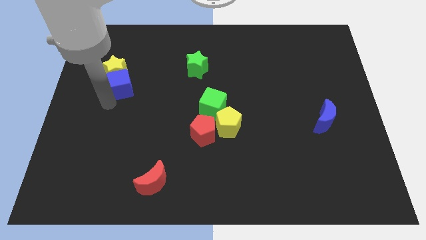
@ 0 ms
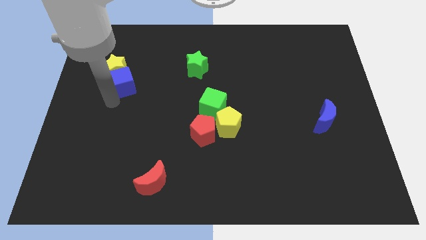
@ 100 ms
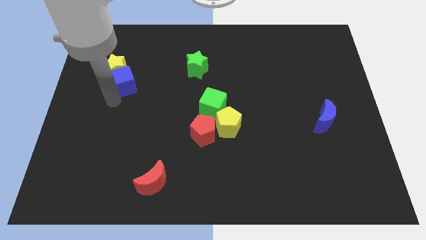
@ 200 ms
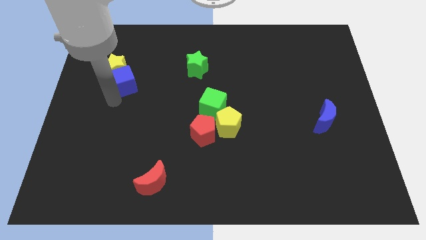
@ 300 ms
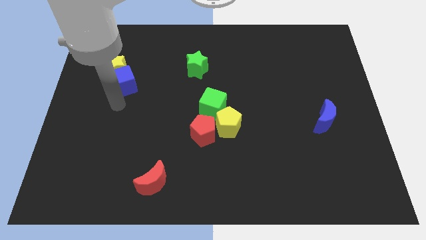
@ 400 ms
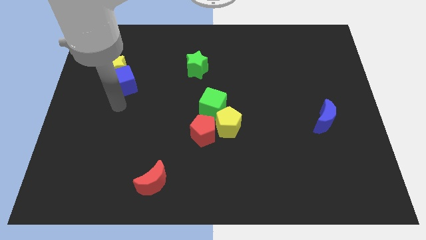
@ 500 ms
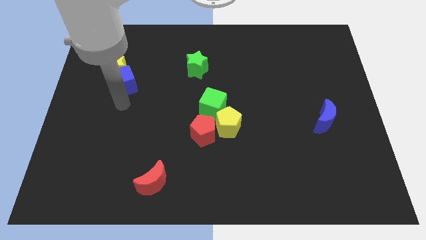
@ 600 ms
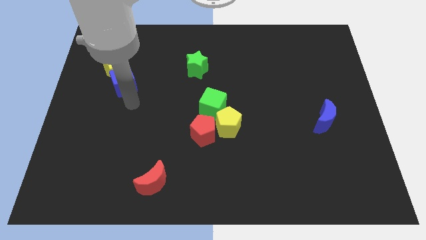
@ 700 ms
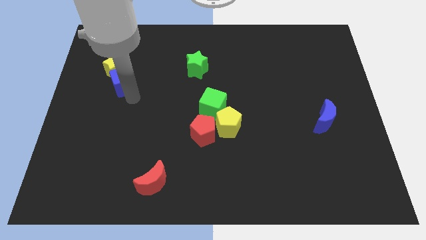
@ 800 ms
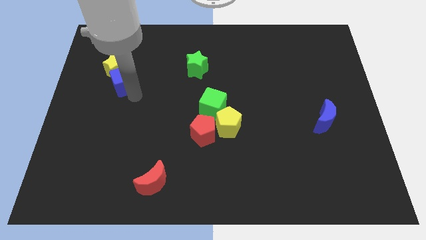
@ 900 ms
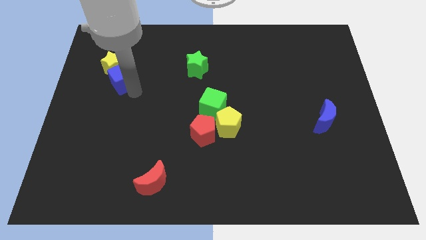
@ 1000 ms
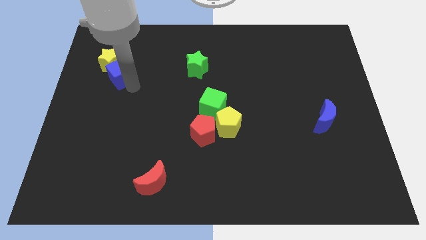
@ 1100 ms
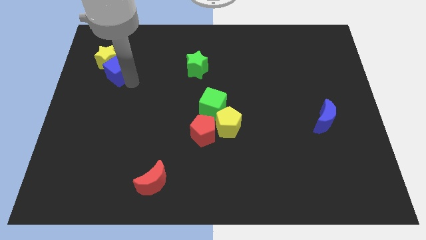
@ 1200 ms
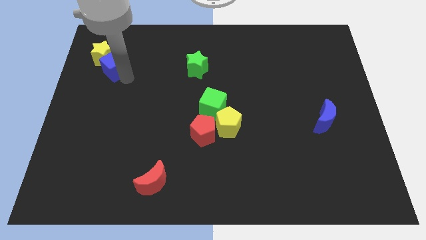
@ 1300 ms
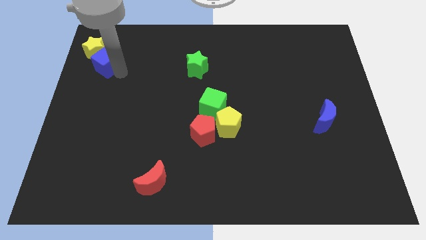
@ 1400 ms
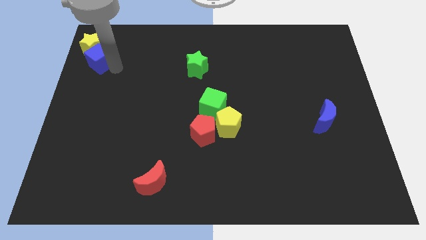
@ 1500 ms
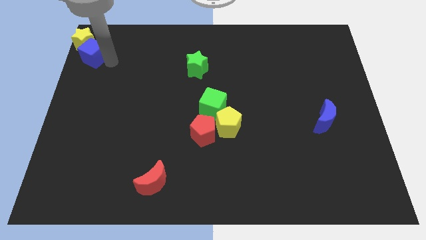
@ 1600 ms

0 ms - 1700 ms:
move blue moon along with yellow star to the top left corner

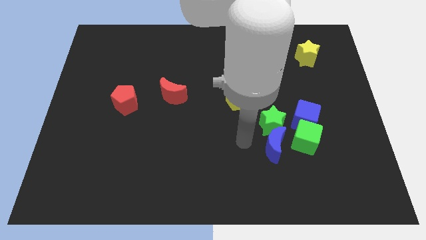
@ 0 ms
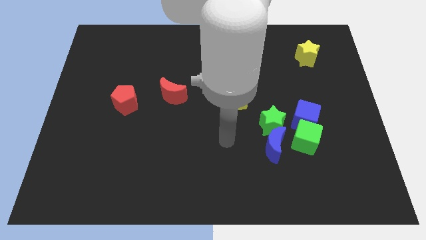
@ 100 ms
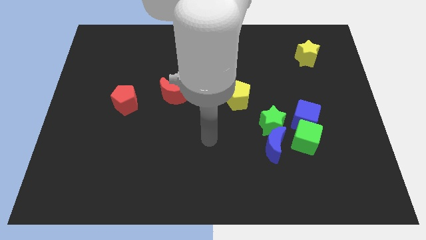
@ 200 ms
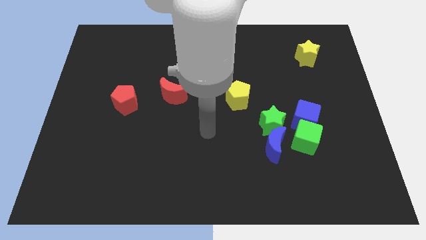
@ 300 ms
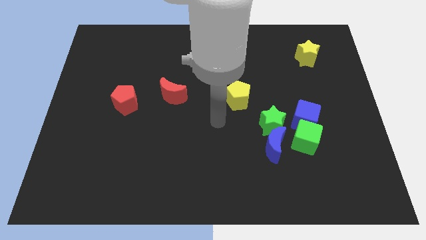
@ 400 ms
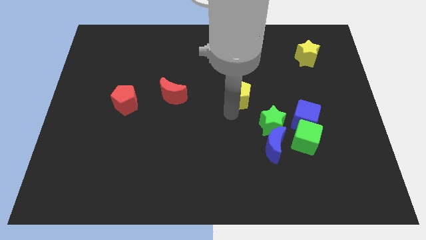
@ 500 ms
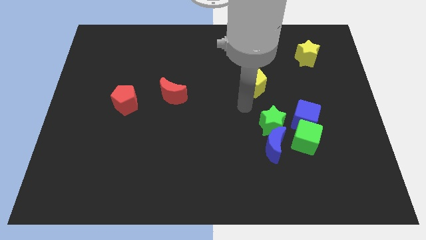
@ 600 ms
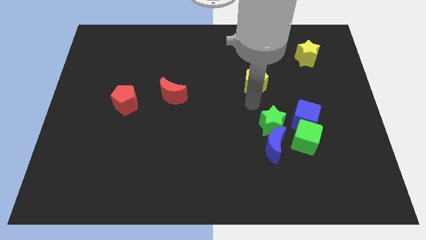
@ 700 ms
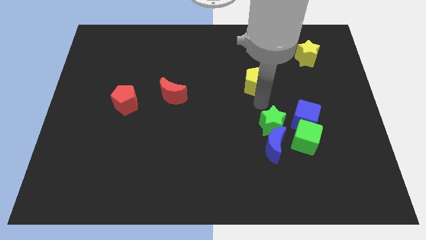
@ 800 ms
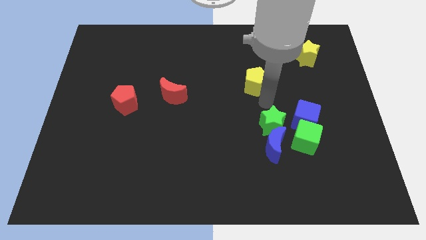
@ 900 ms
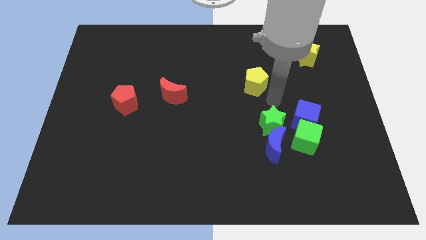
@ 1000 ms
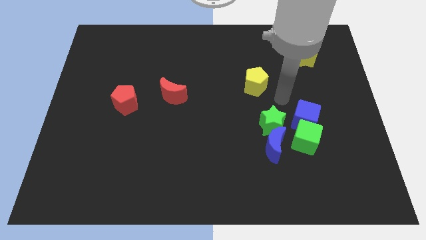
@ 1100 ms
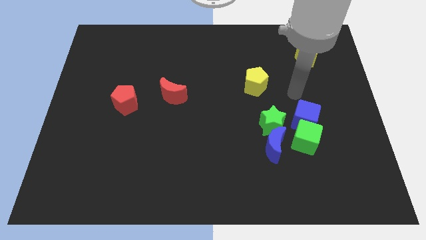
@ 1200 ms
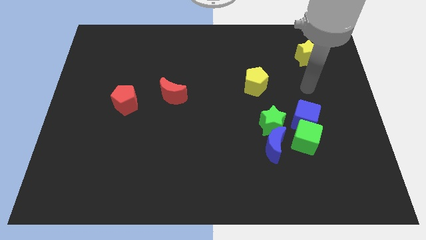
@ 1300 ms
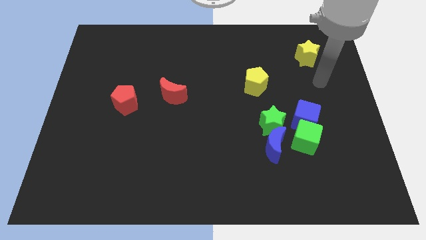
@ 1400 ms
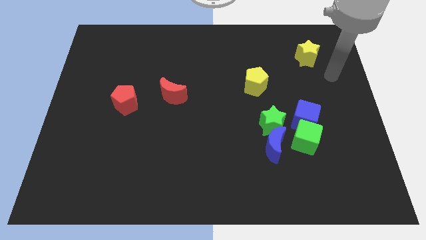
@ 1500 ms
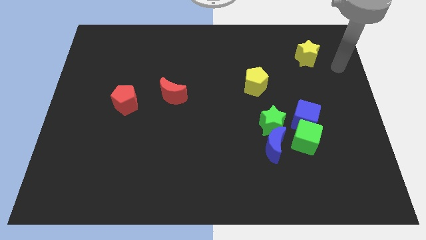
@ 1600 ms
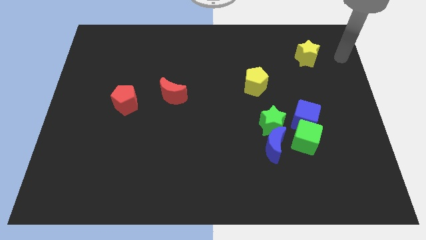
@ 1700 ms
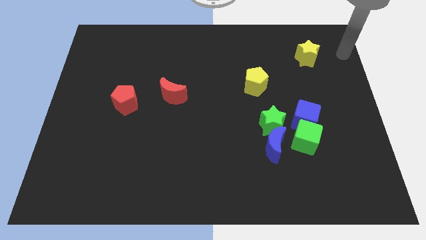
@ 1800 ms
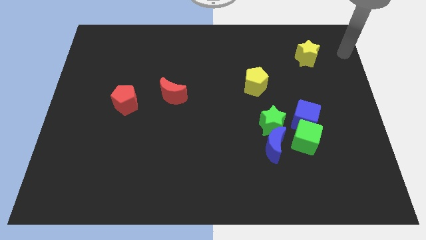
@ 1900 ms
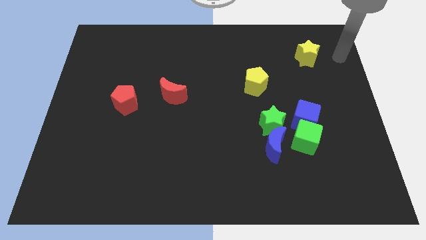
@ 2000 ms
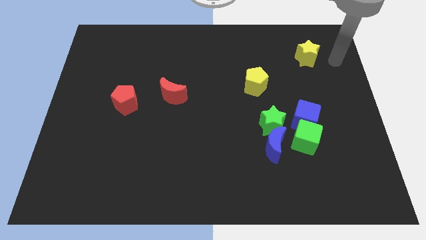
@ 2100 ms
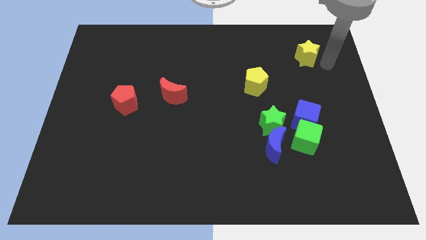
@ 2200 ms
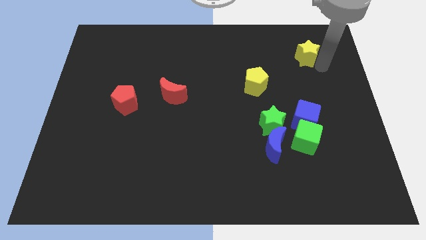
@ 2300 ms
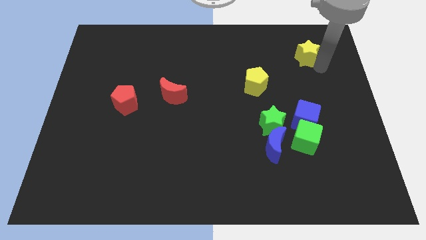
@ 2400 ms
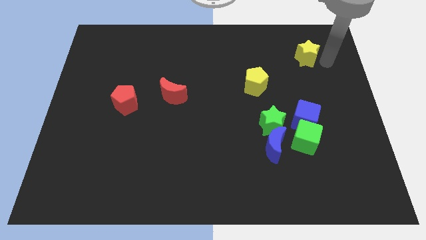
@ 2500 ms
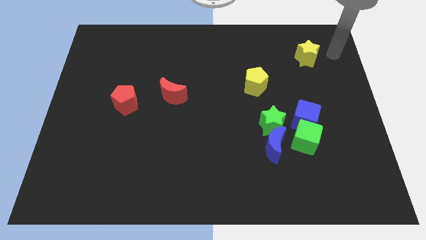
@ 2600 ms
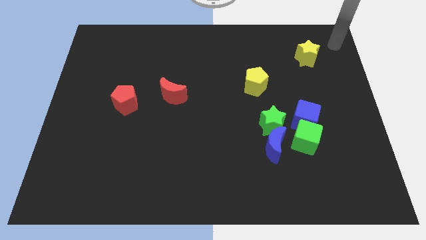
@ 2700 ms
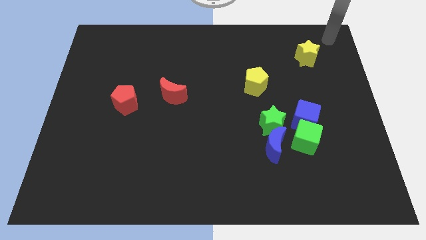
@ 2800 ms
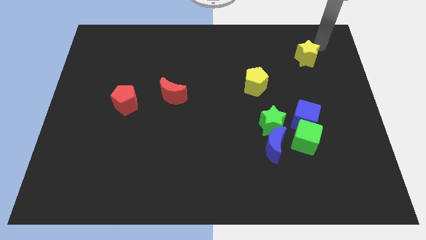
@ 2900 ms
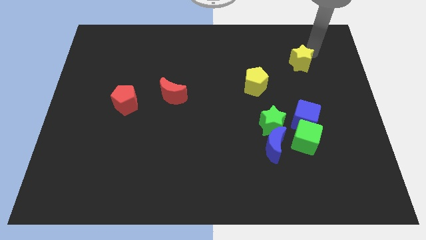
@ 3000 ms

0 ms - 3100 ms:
slide both the yellow blocks diagonal to each other

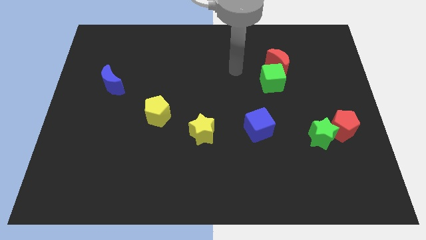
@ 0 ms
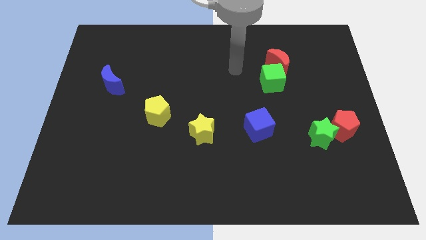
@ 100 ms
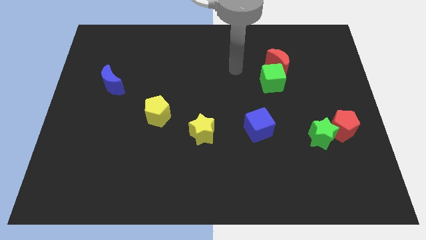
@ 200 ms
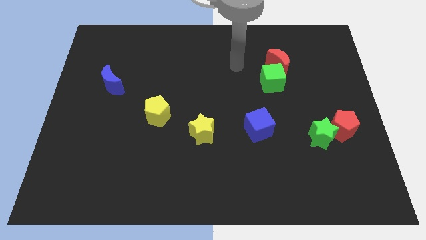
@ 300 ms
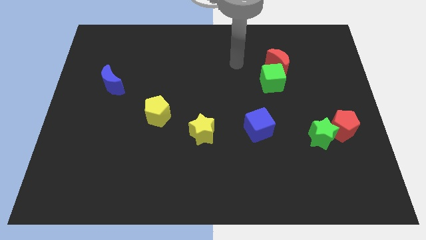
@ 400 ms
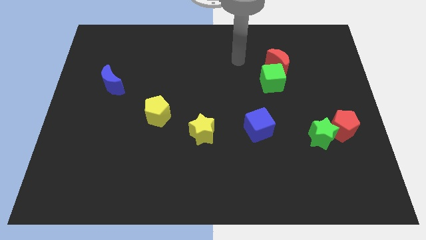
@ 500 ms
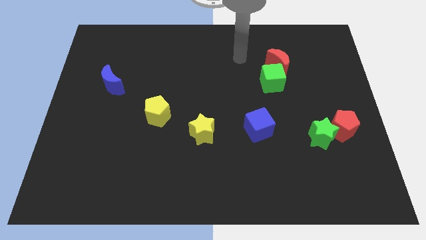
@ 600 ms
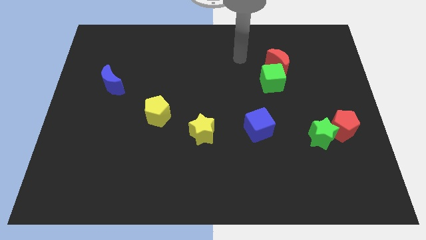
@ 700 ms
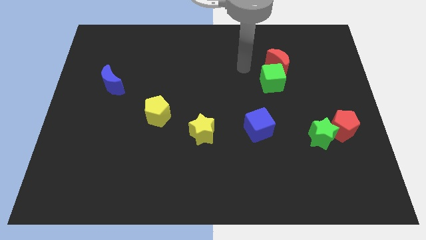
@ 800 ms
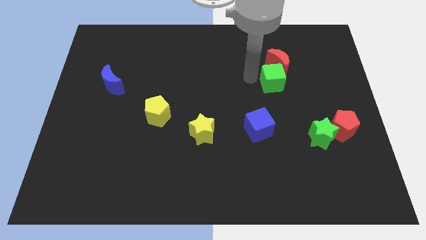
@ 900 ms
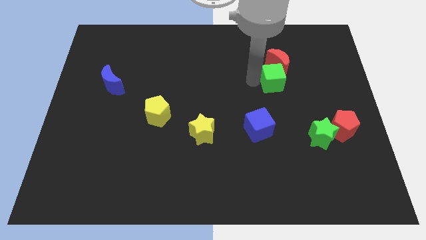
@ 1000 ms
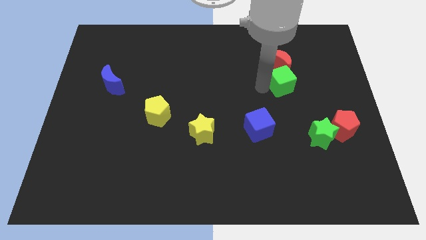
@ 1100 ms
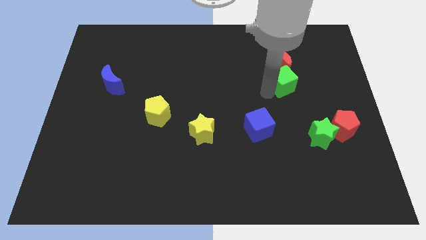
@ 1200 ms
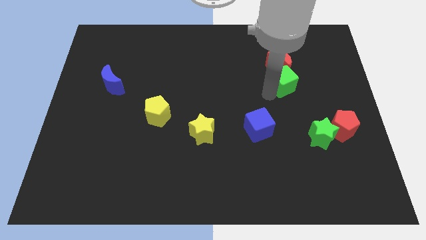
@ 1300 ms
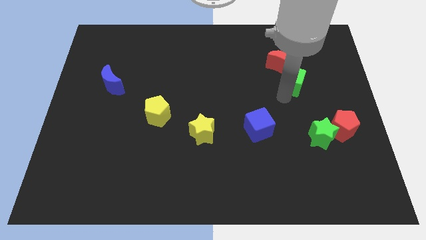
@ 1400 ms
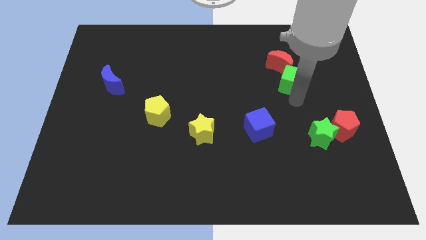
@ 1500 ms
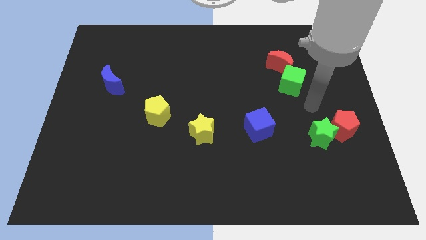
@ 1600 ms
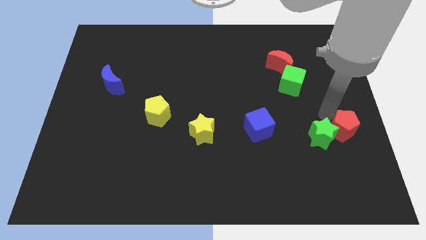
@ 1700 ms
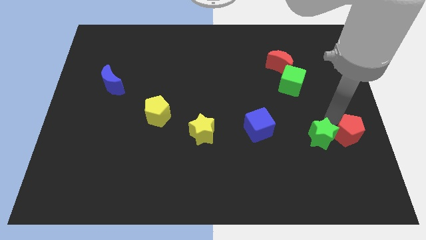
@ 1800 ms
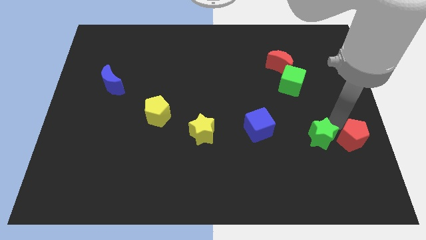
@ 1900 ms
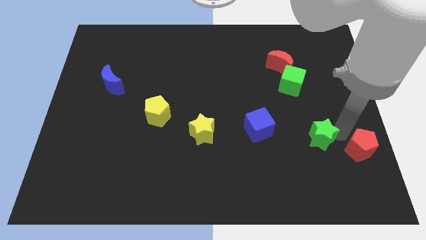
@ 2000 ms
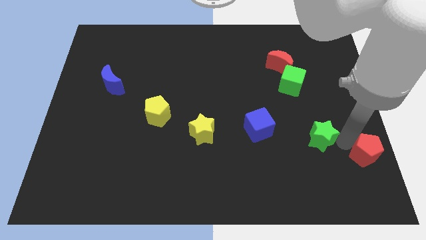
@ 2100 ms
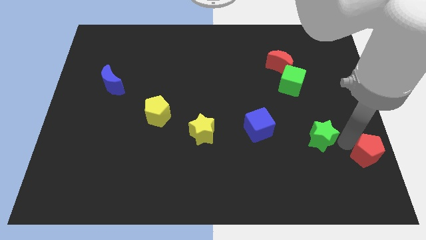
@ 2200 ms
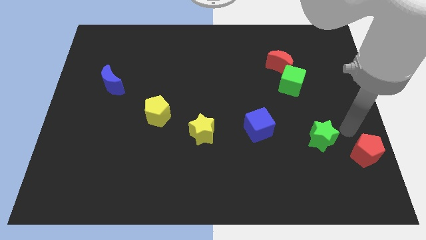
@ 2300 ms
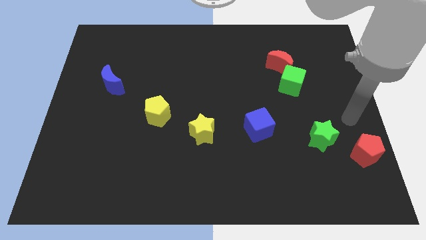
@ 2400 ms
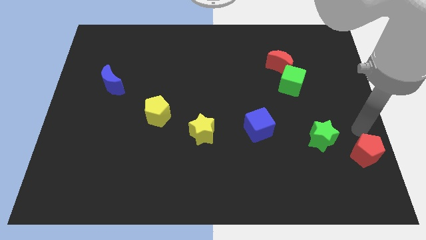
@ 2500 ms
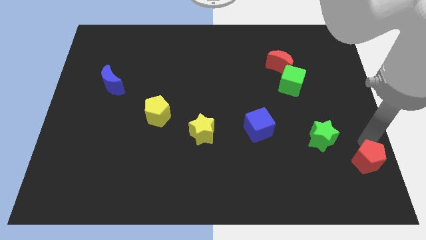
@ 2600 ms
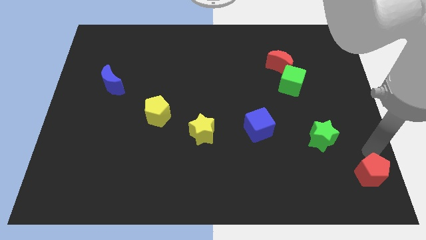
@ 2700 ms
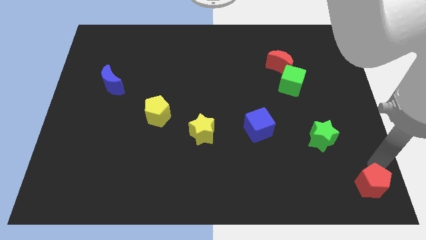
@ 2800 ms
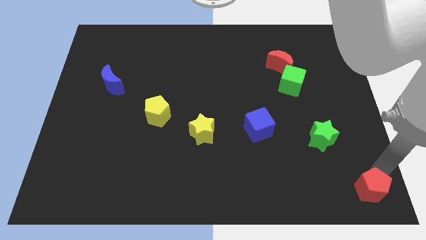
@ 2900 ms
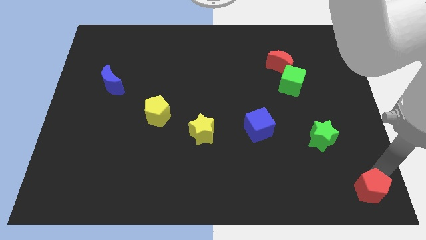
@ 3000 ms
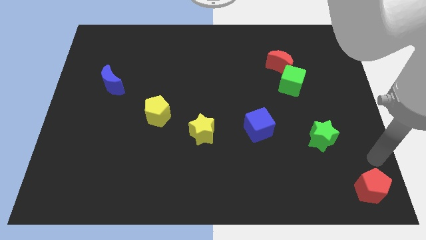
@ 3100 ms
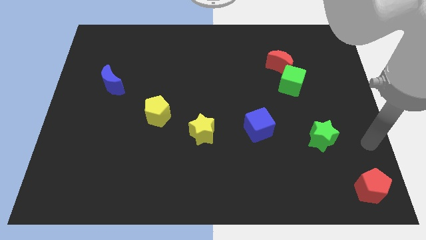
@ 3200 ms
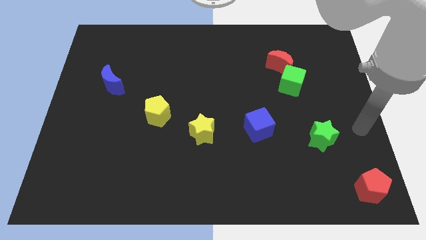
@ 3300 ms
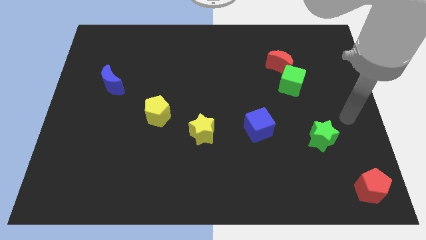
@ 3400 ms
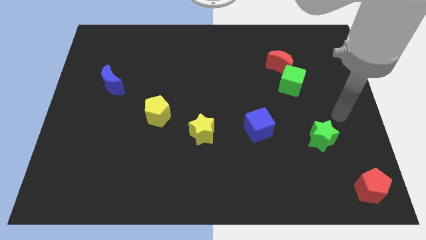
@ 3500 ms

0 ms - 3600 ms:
drag the red pentagon towards bottom right side

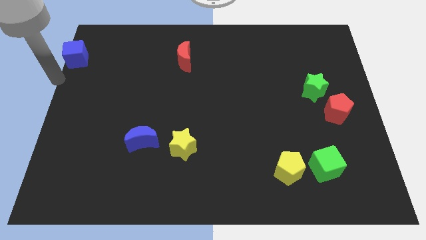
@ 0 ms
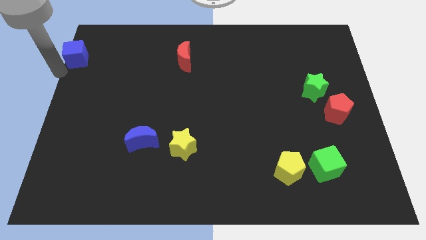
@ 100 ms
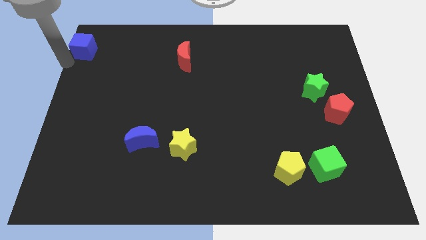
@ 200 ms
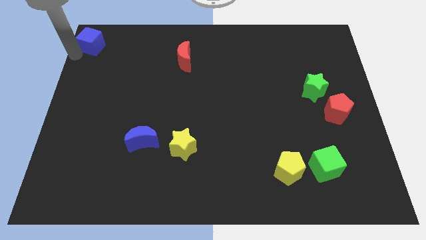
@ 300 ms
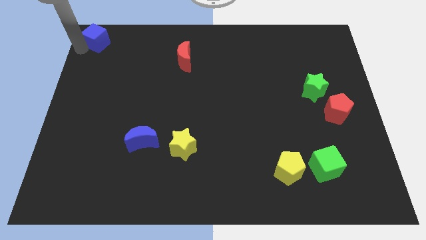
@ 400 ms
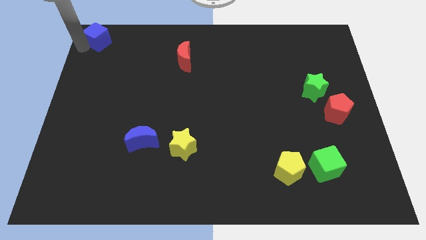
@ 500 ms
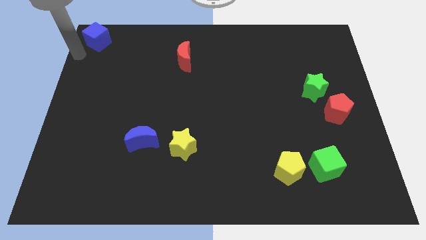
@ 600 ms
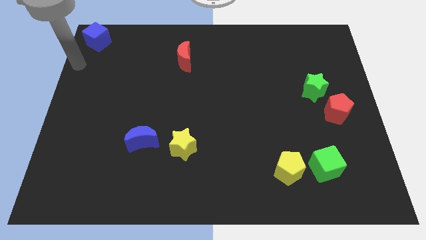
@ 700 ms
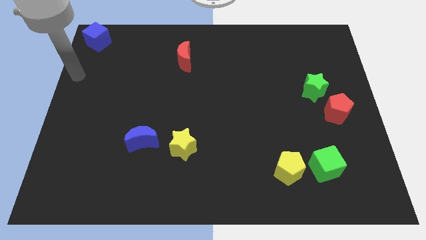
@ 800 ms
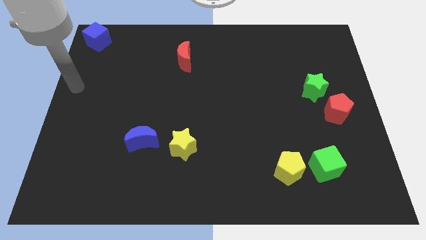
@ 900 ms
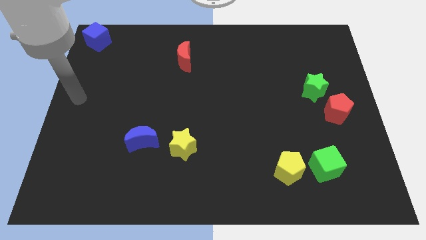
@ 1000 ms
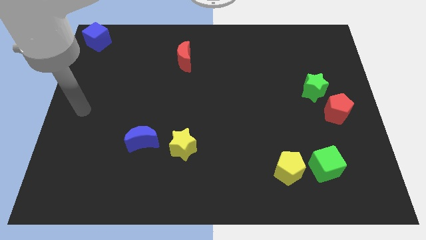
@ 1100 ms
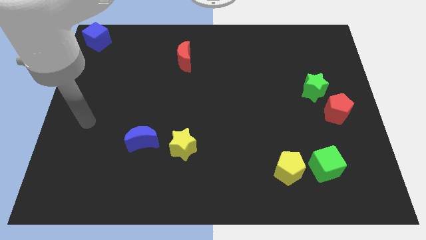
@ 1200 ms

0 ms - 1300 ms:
place blue cube at the top left corner of the board
